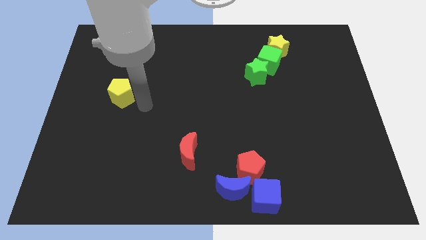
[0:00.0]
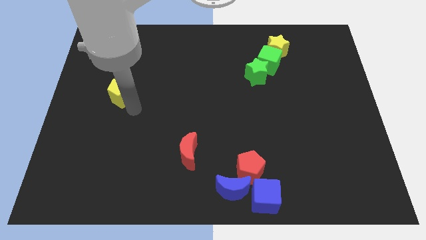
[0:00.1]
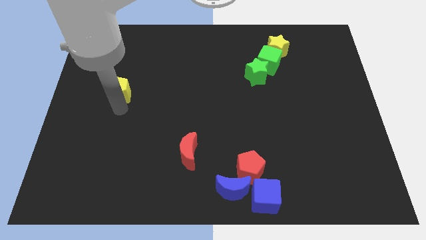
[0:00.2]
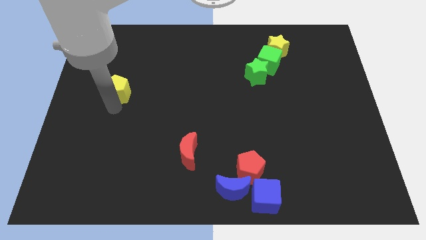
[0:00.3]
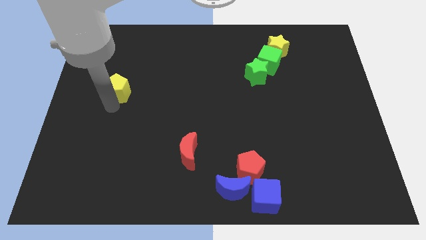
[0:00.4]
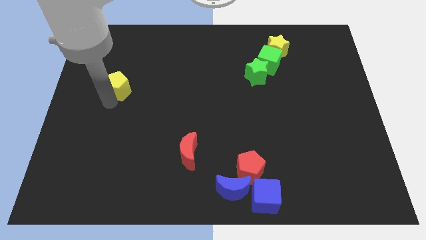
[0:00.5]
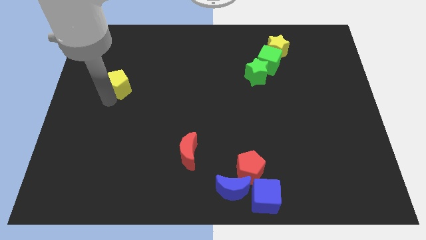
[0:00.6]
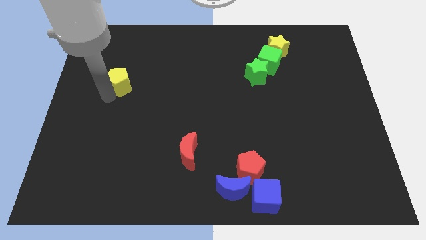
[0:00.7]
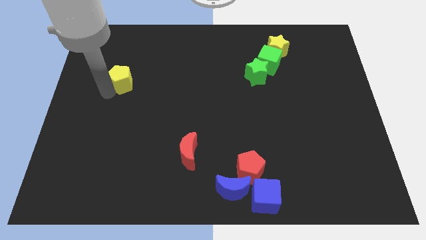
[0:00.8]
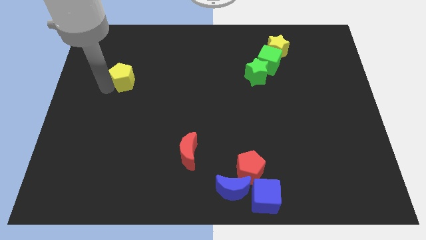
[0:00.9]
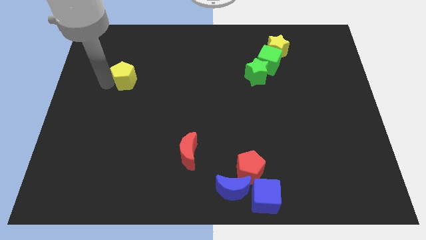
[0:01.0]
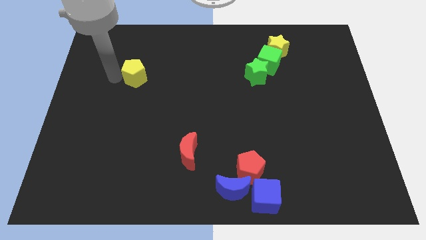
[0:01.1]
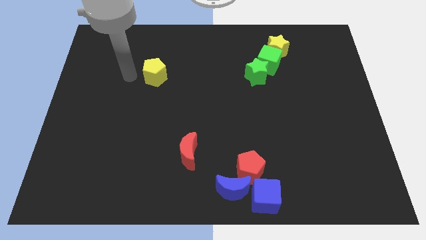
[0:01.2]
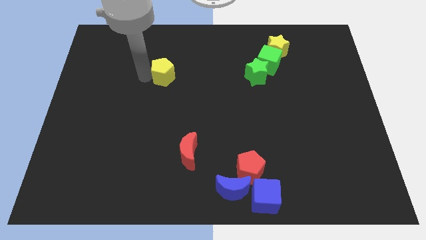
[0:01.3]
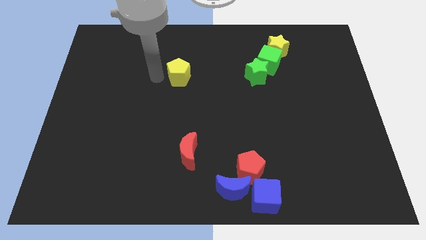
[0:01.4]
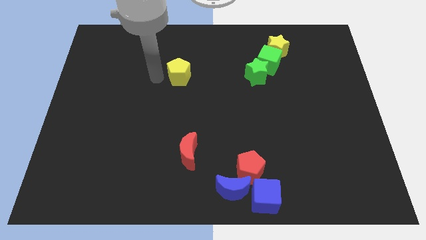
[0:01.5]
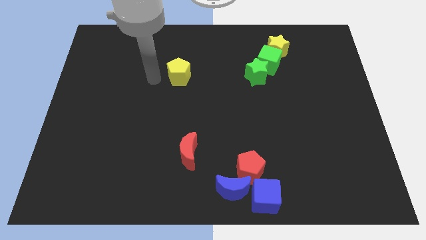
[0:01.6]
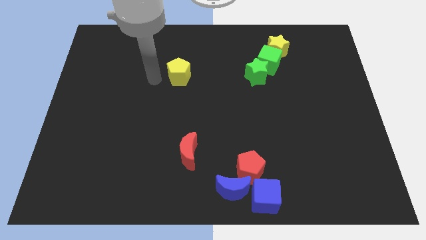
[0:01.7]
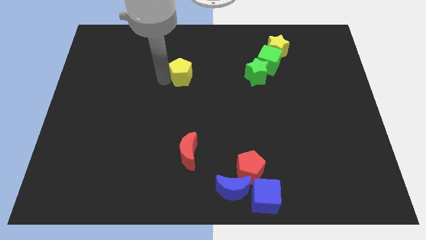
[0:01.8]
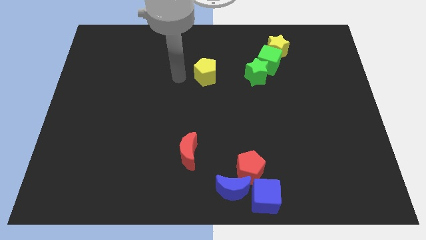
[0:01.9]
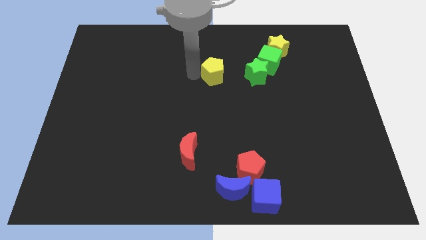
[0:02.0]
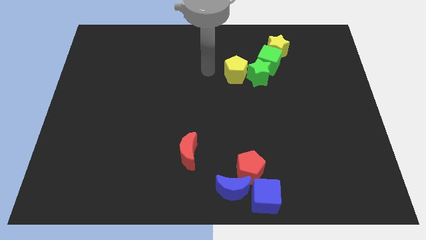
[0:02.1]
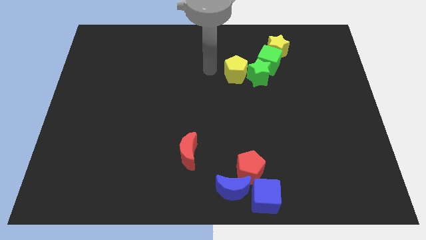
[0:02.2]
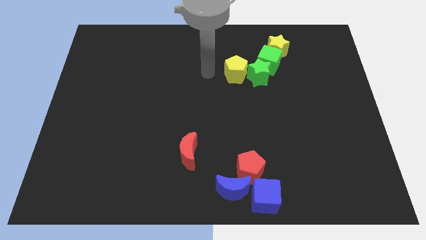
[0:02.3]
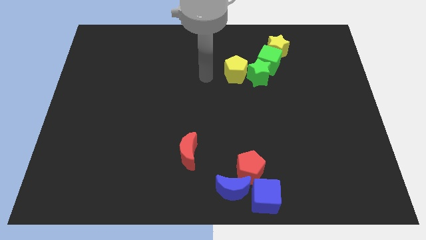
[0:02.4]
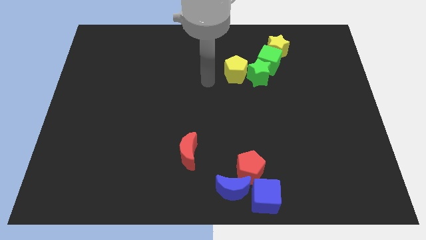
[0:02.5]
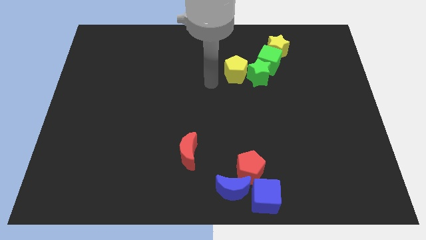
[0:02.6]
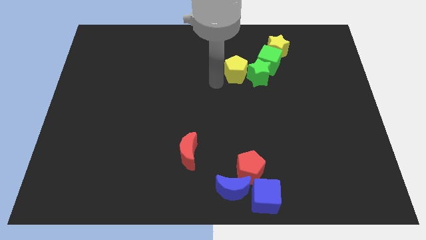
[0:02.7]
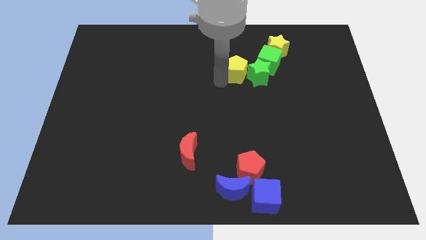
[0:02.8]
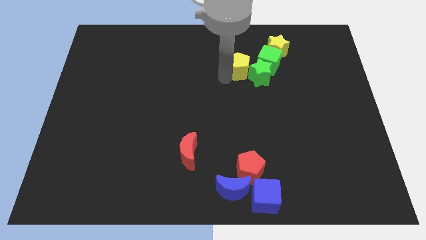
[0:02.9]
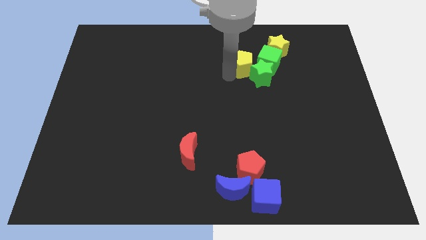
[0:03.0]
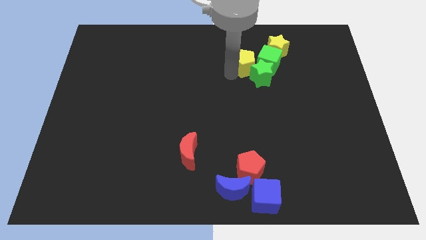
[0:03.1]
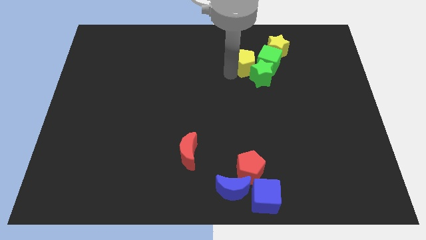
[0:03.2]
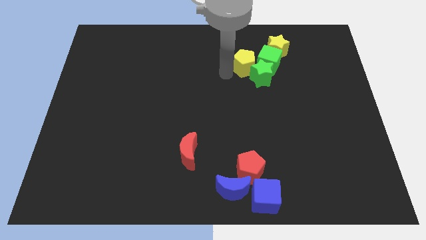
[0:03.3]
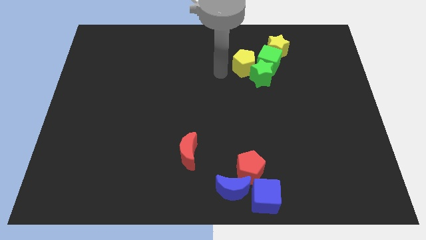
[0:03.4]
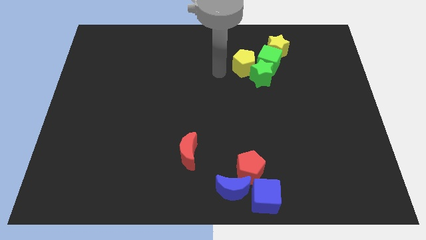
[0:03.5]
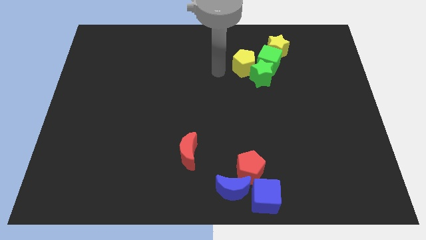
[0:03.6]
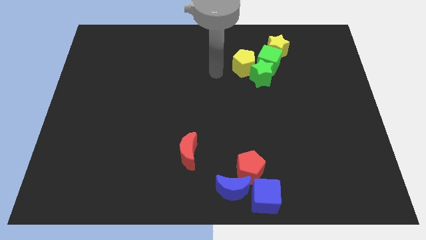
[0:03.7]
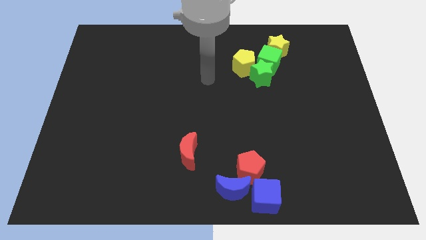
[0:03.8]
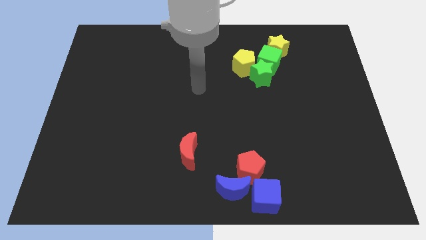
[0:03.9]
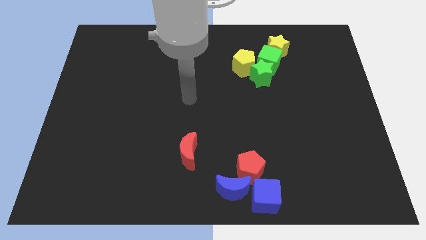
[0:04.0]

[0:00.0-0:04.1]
push the yellow pentagon to the bottom left side of the green cube

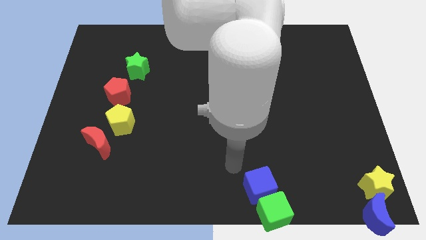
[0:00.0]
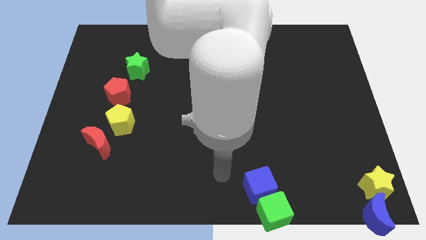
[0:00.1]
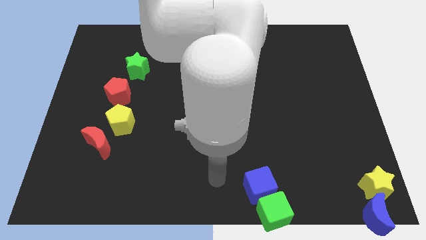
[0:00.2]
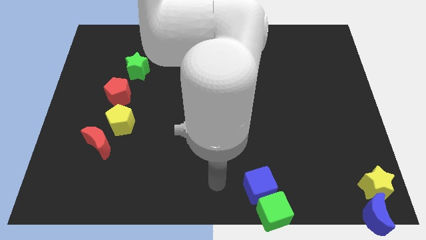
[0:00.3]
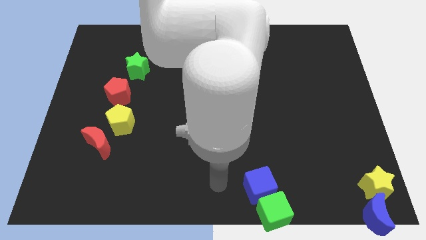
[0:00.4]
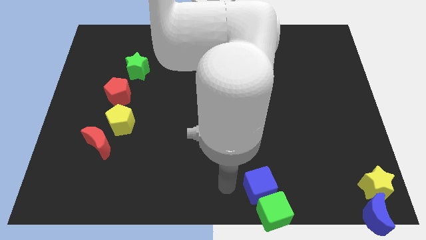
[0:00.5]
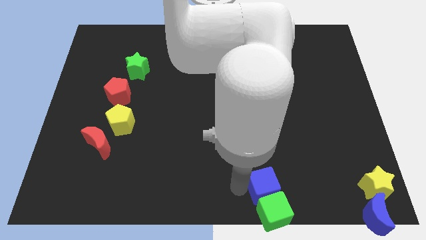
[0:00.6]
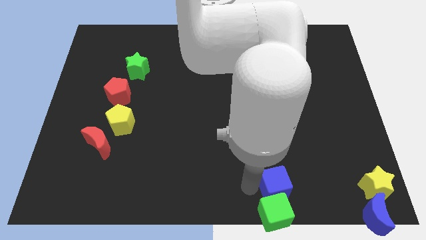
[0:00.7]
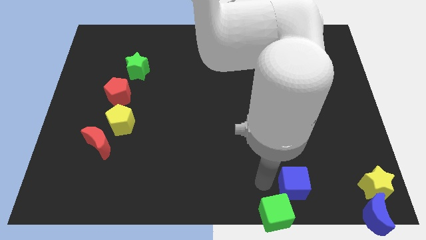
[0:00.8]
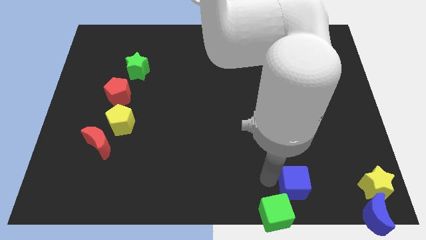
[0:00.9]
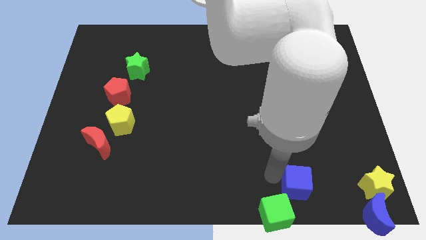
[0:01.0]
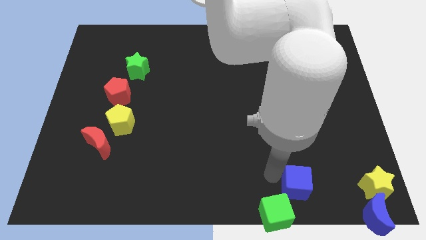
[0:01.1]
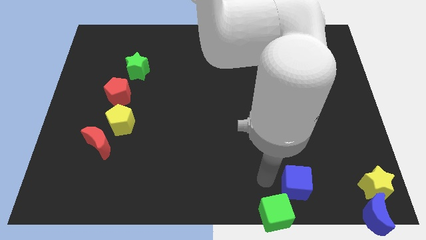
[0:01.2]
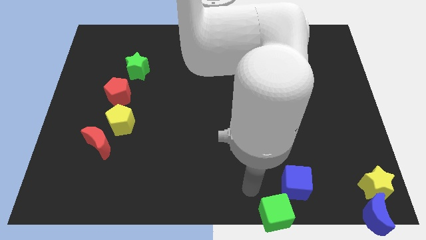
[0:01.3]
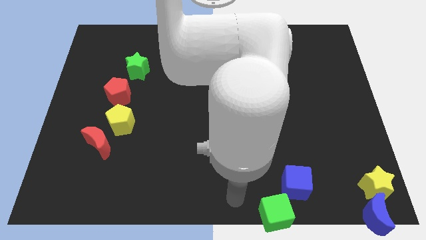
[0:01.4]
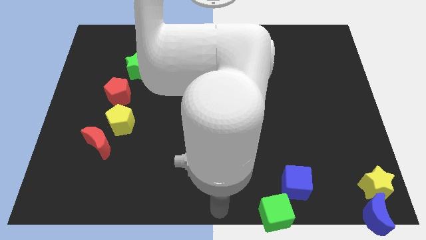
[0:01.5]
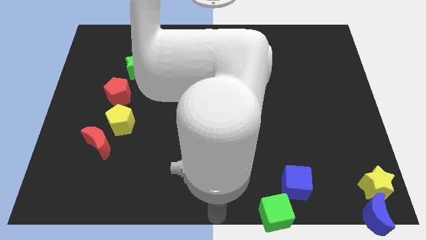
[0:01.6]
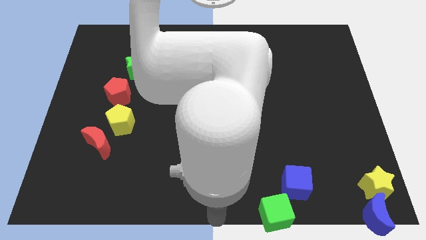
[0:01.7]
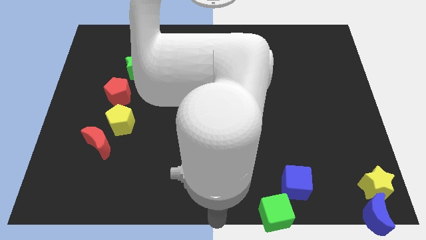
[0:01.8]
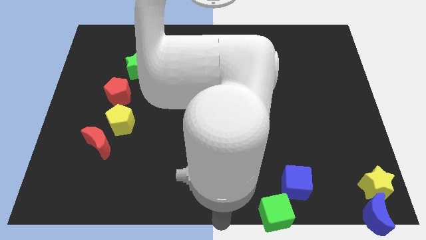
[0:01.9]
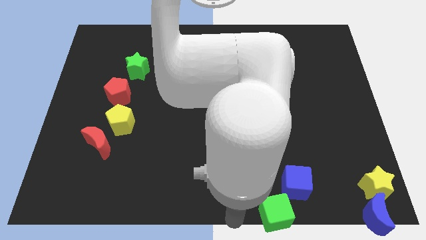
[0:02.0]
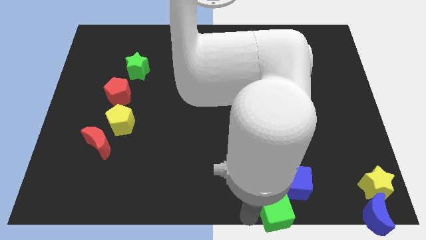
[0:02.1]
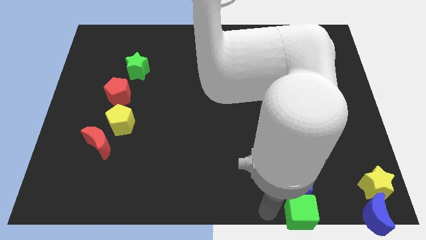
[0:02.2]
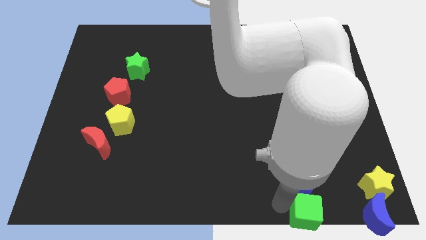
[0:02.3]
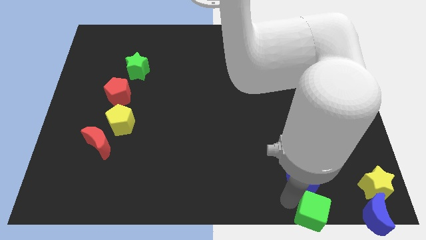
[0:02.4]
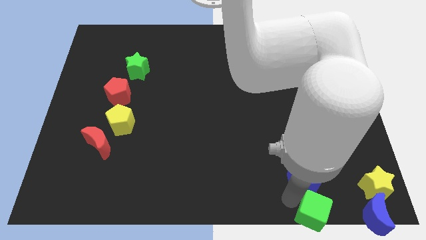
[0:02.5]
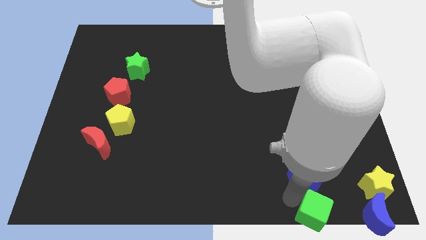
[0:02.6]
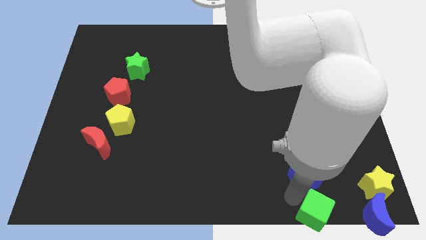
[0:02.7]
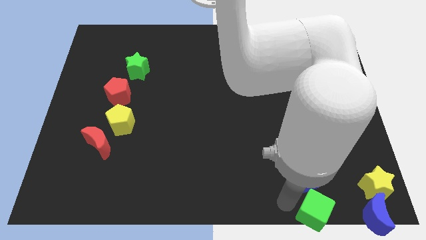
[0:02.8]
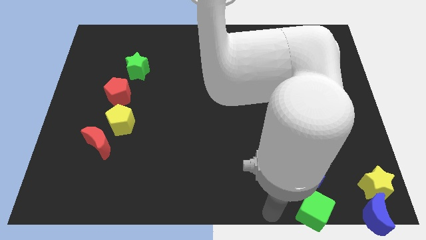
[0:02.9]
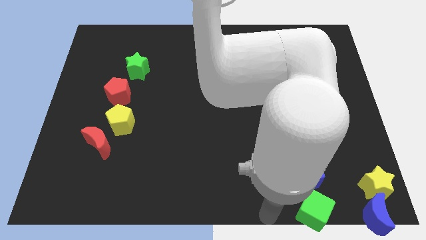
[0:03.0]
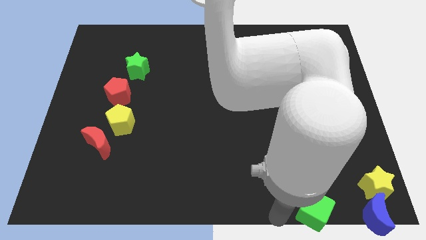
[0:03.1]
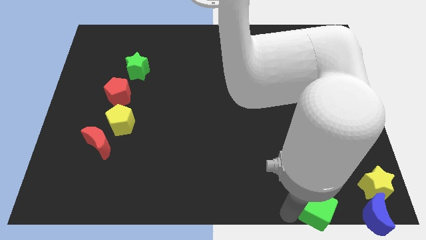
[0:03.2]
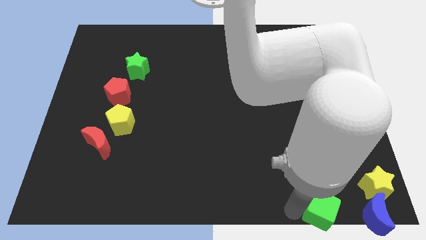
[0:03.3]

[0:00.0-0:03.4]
move the cubes towards the right side

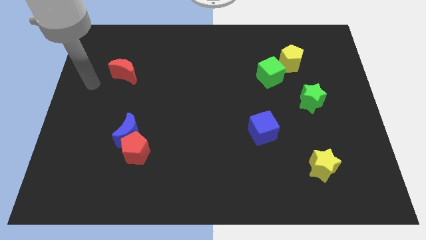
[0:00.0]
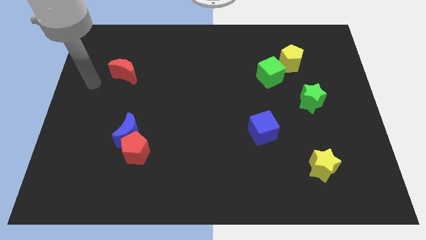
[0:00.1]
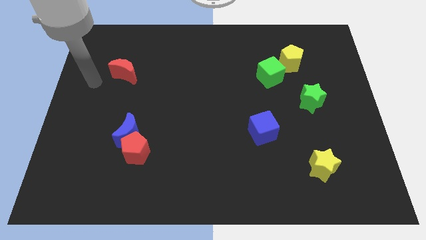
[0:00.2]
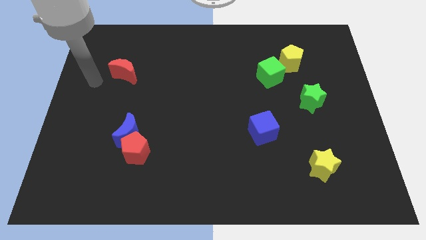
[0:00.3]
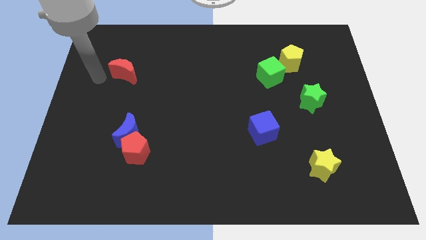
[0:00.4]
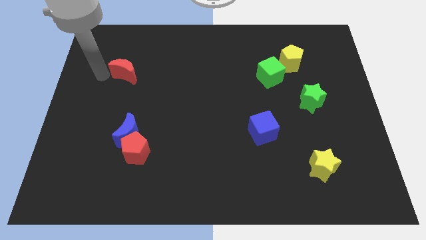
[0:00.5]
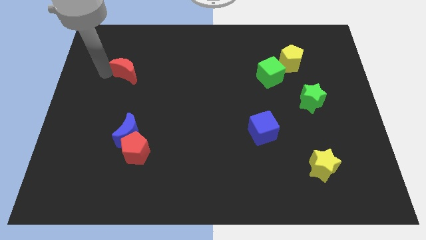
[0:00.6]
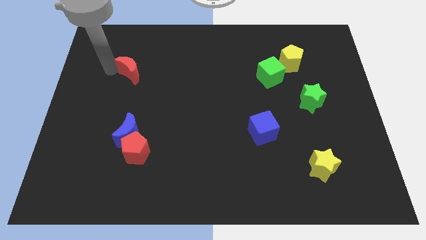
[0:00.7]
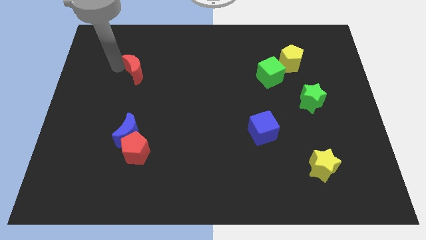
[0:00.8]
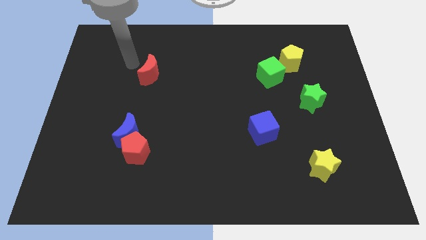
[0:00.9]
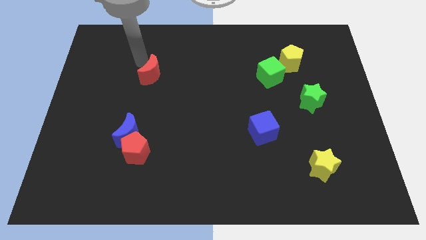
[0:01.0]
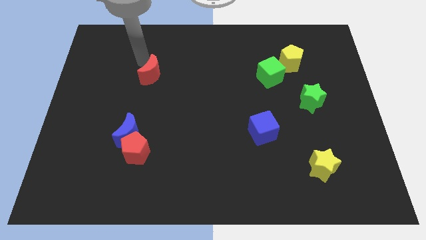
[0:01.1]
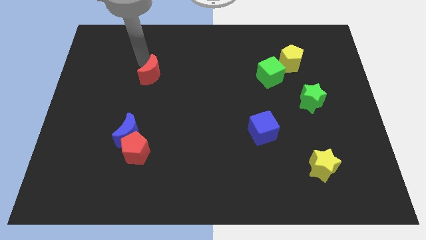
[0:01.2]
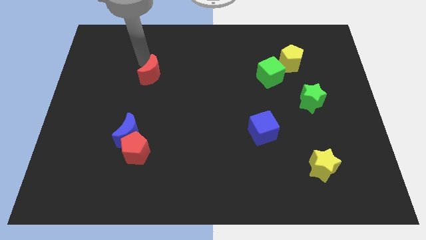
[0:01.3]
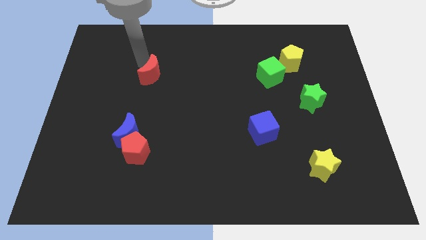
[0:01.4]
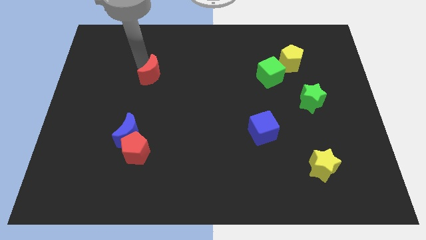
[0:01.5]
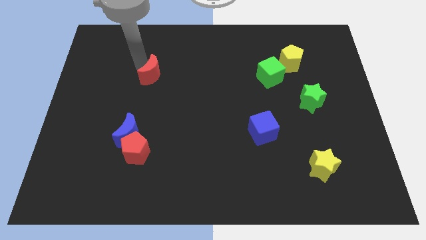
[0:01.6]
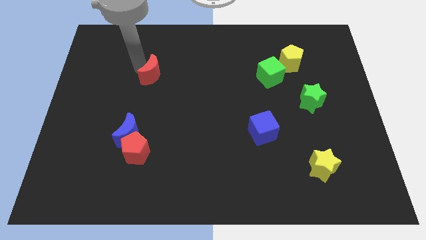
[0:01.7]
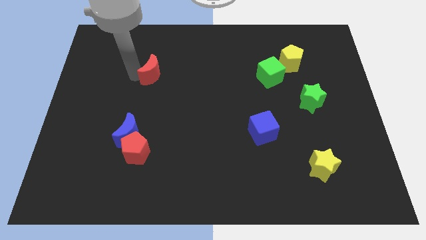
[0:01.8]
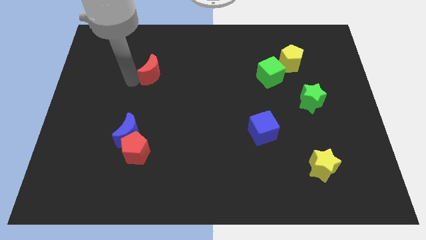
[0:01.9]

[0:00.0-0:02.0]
push the red moon to the center
